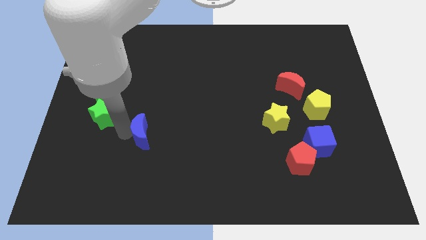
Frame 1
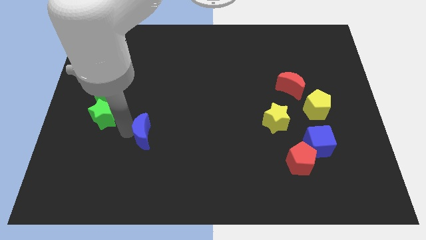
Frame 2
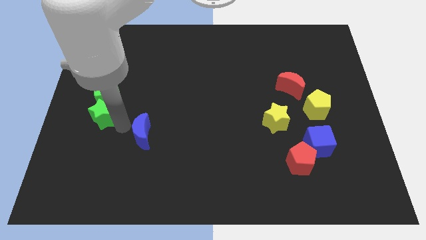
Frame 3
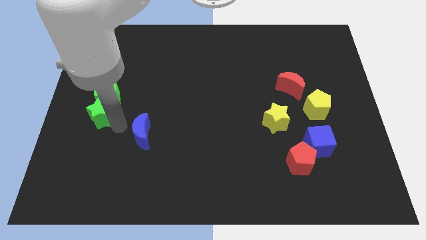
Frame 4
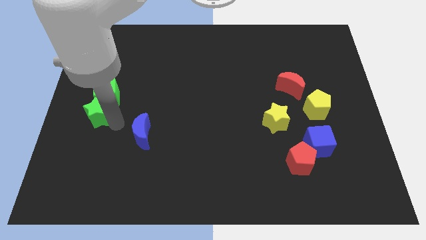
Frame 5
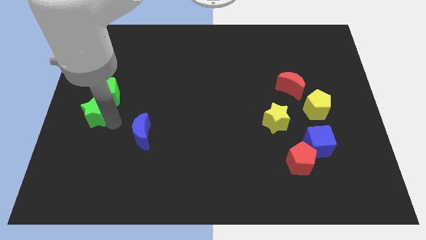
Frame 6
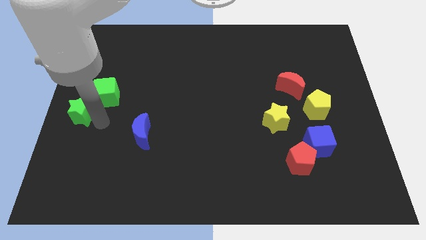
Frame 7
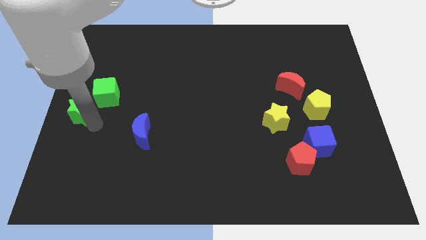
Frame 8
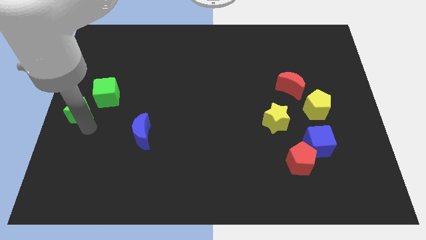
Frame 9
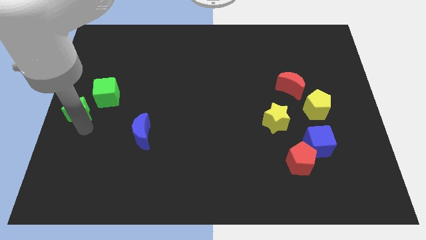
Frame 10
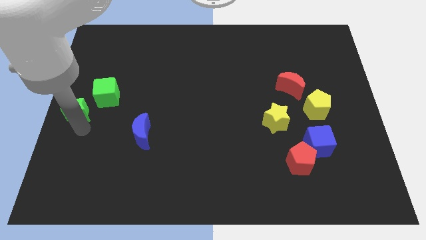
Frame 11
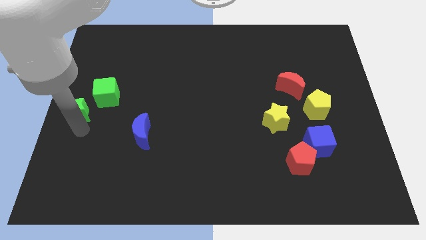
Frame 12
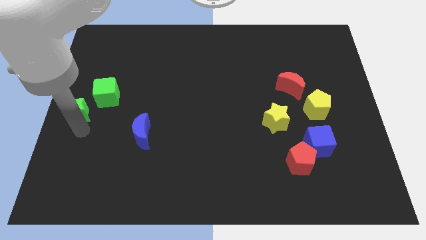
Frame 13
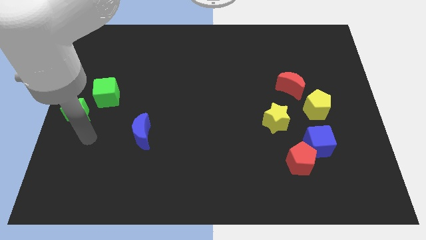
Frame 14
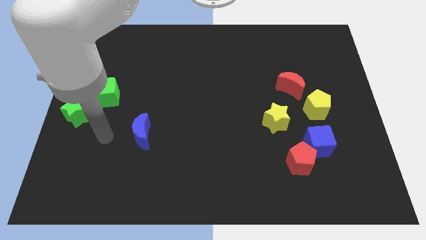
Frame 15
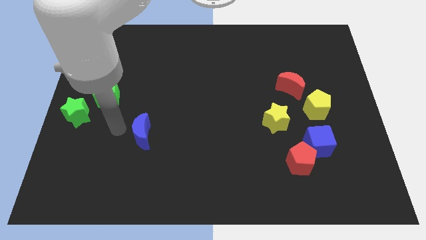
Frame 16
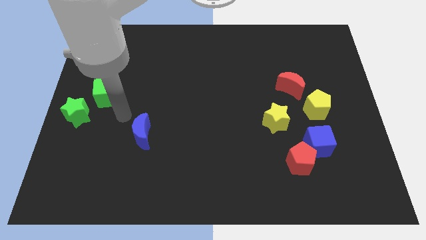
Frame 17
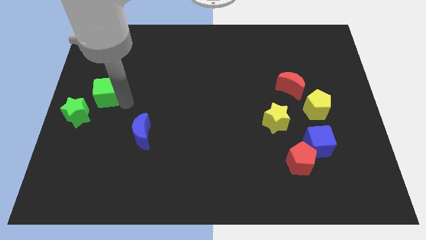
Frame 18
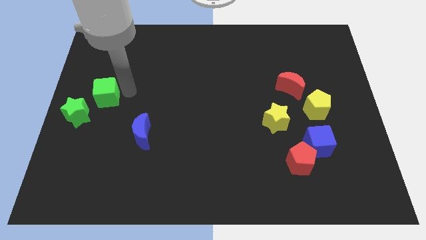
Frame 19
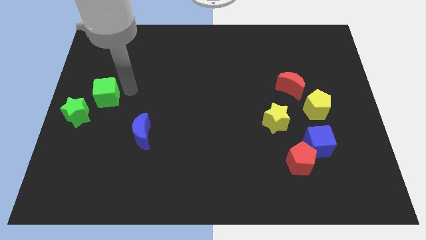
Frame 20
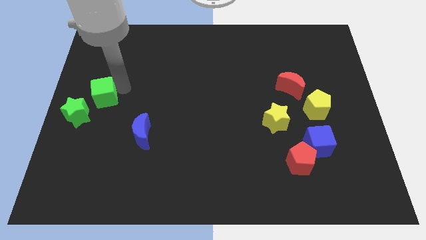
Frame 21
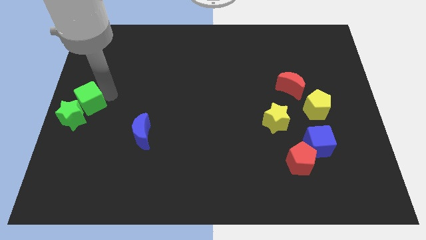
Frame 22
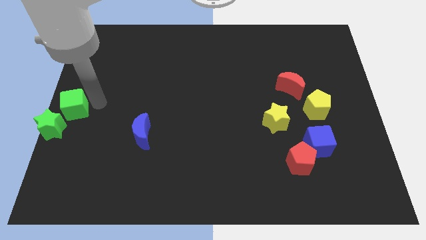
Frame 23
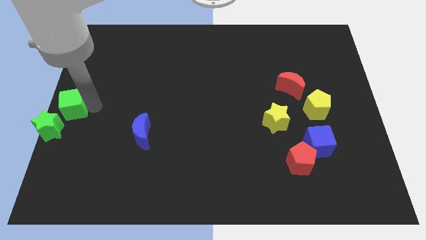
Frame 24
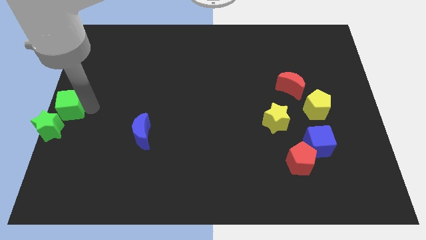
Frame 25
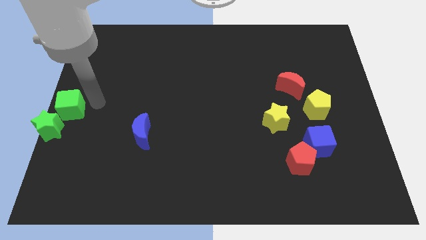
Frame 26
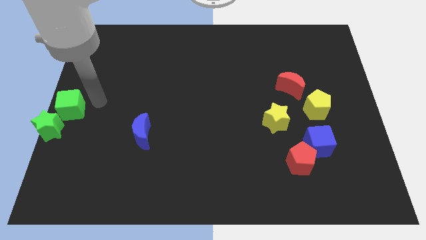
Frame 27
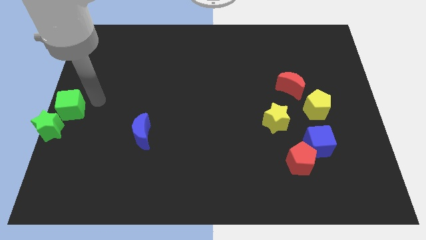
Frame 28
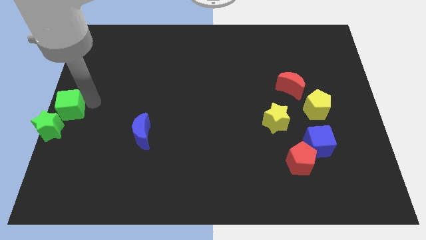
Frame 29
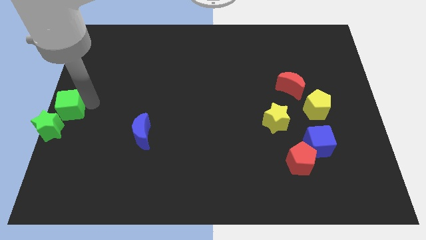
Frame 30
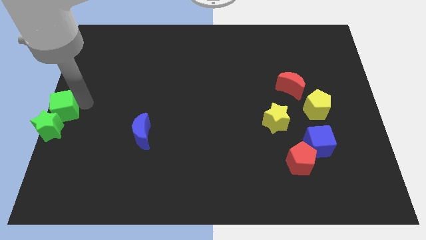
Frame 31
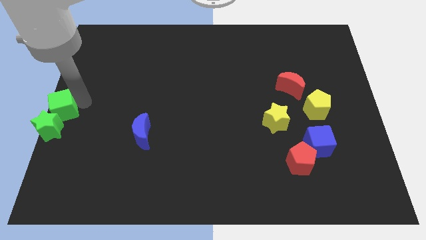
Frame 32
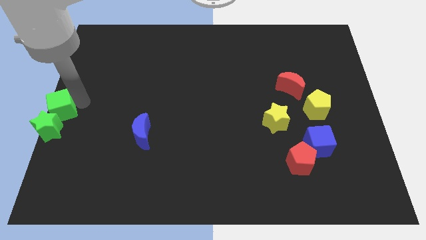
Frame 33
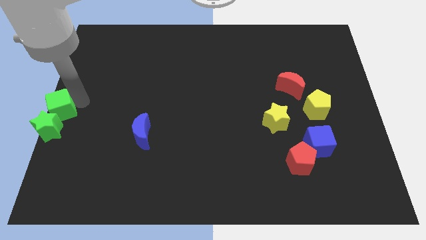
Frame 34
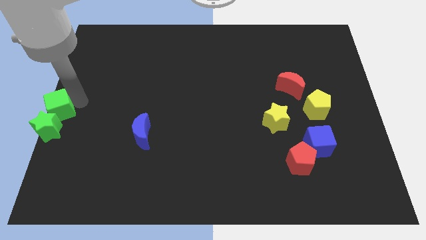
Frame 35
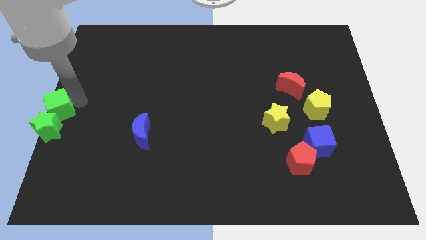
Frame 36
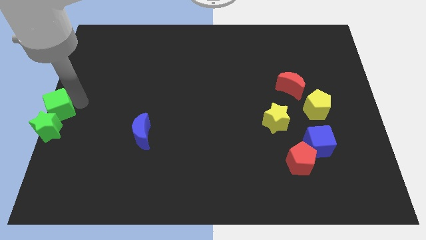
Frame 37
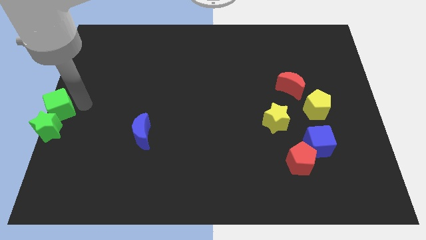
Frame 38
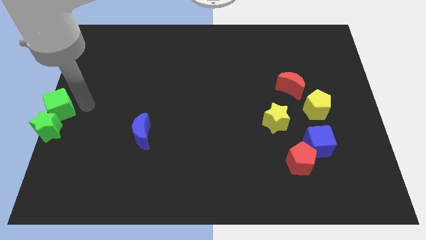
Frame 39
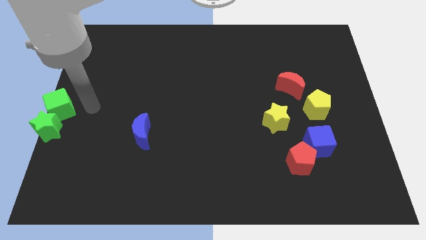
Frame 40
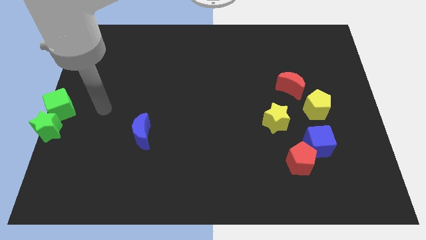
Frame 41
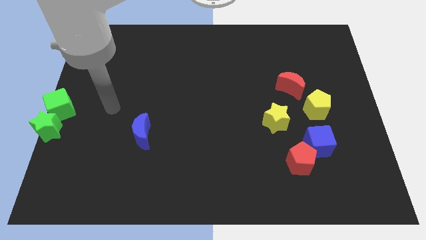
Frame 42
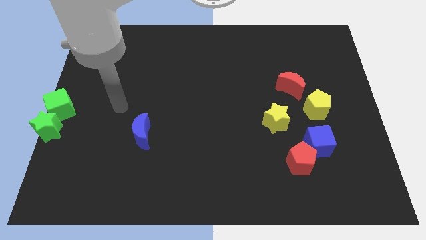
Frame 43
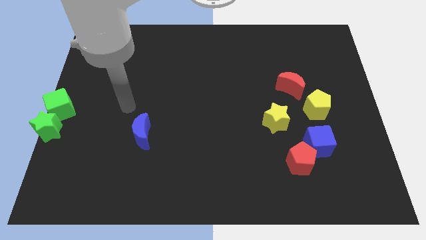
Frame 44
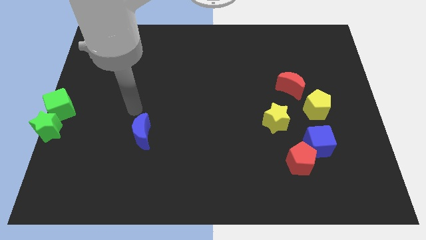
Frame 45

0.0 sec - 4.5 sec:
push the green star and green cube to the center left of the board

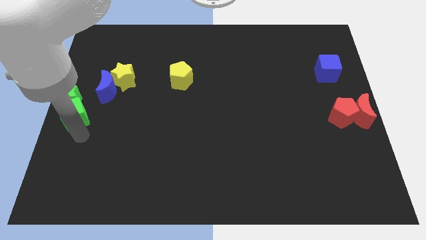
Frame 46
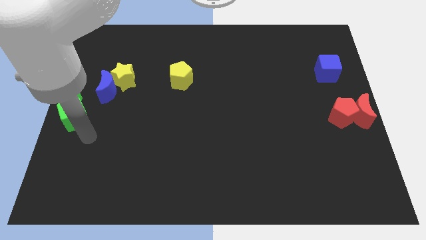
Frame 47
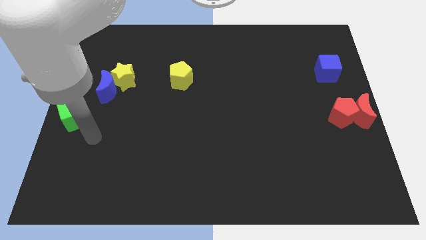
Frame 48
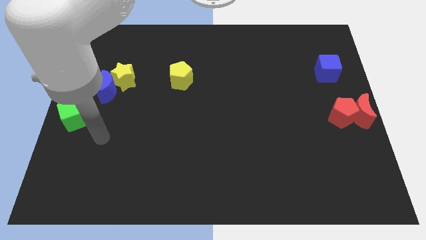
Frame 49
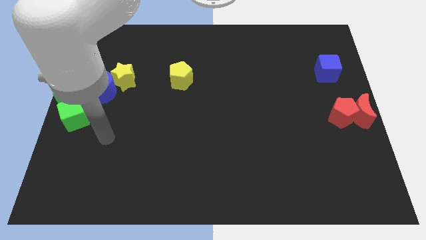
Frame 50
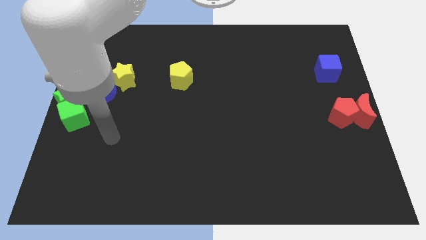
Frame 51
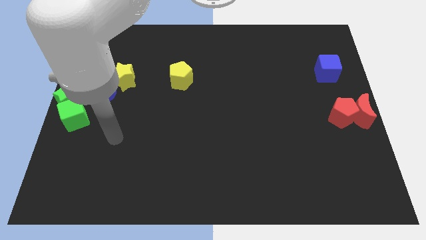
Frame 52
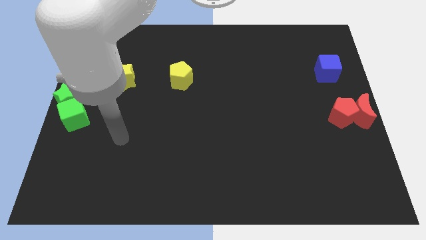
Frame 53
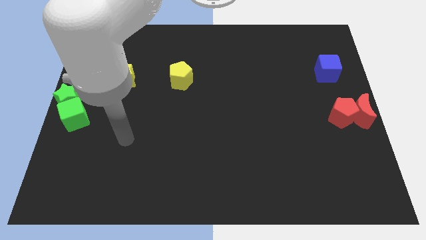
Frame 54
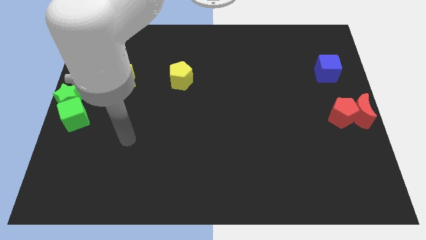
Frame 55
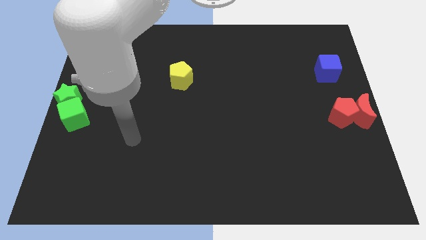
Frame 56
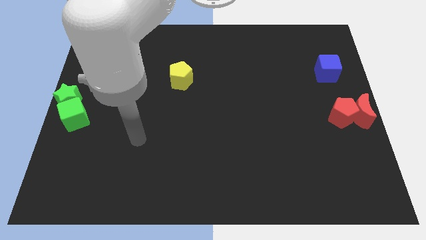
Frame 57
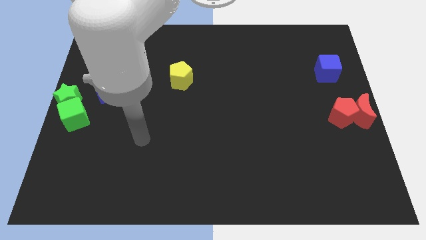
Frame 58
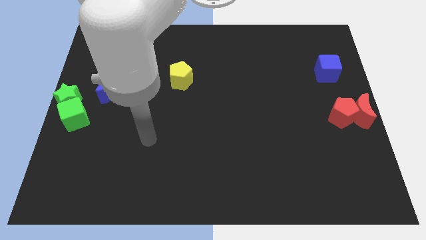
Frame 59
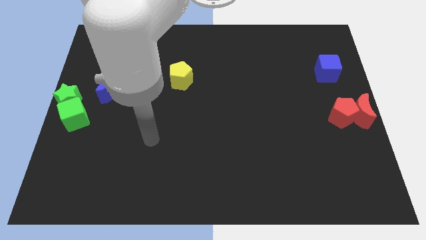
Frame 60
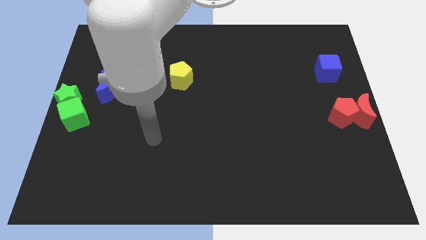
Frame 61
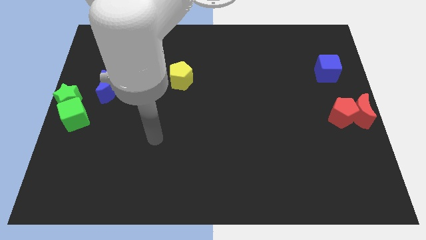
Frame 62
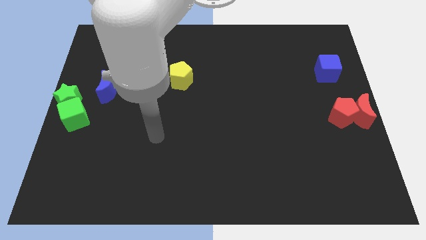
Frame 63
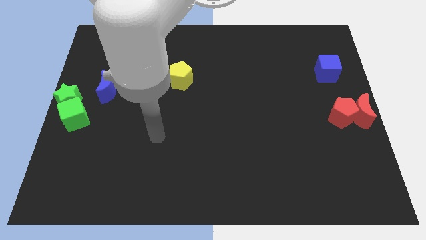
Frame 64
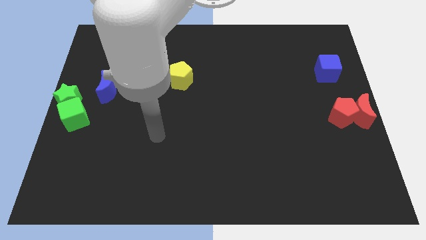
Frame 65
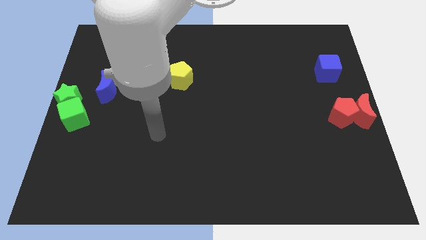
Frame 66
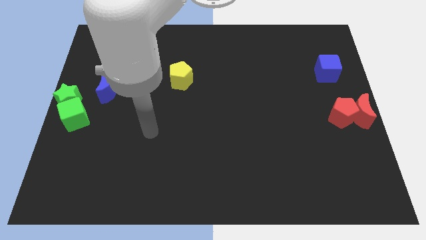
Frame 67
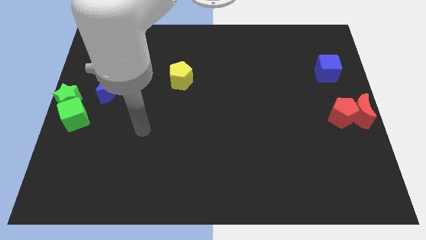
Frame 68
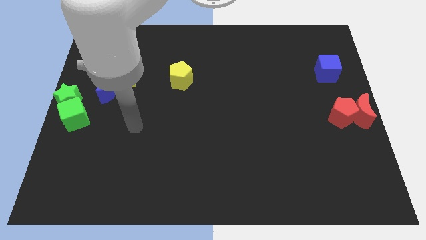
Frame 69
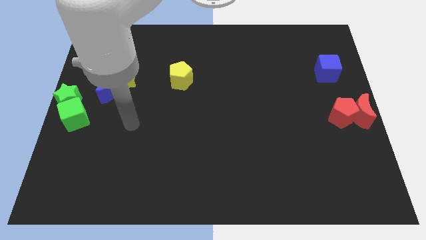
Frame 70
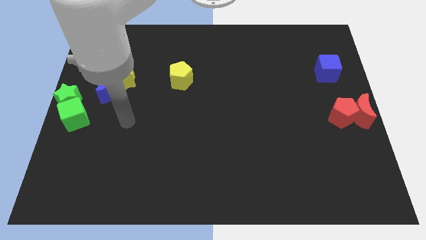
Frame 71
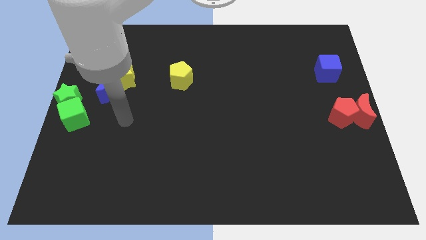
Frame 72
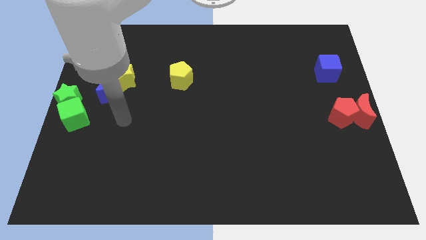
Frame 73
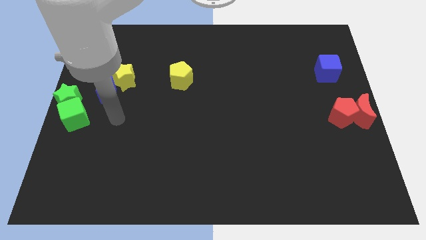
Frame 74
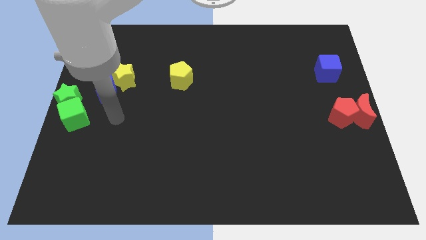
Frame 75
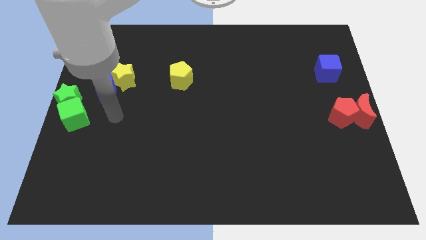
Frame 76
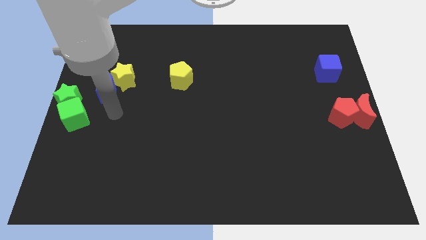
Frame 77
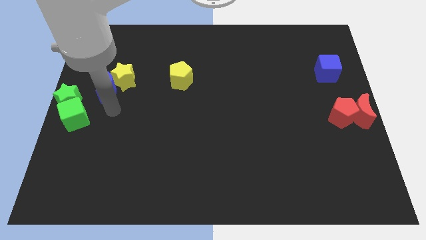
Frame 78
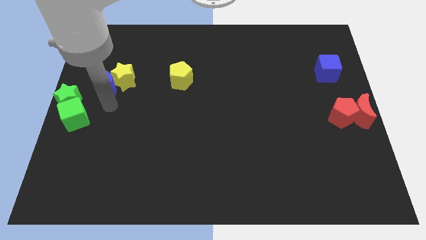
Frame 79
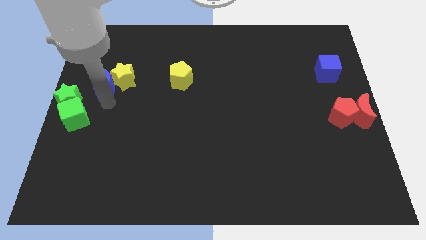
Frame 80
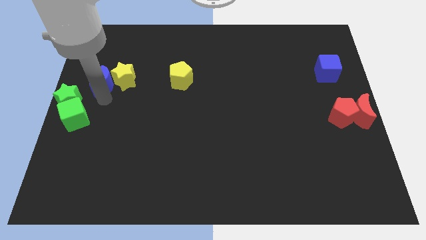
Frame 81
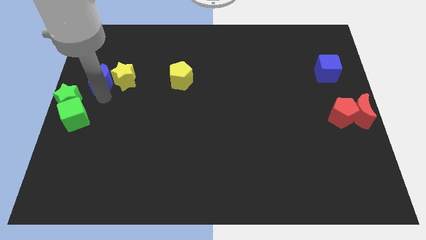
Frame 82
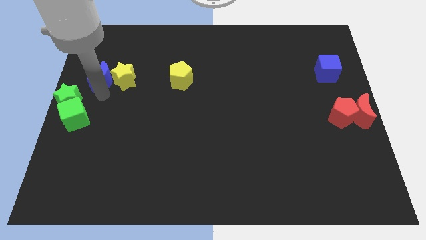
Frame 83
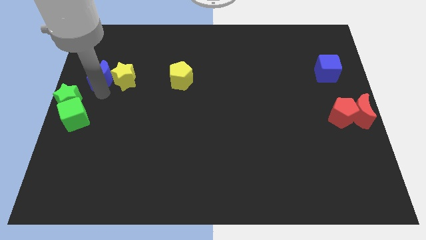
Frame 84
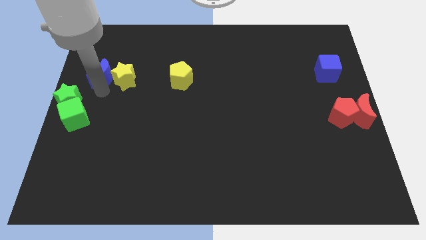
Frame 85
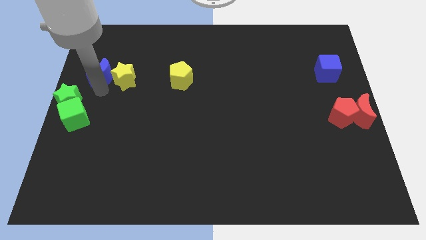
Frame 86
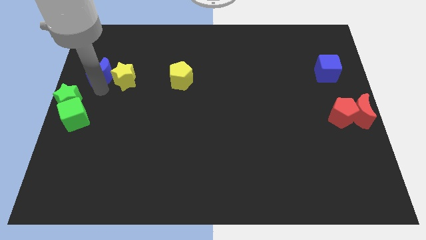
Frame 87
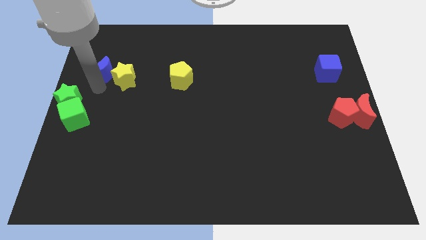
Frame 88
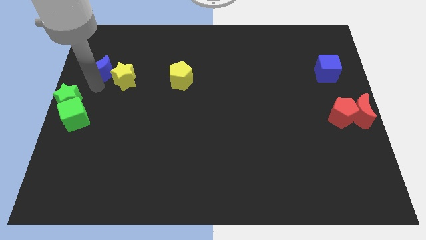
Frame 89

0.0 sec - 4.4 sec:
place blue moon to the left of yellow star
